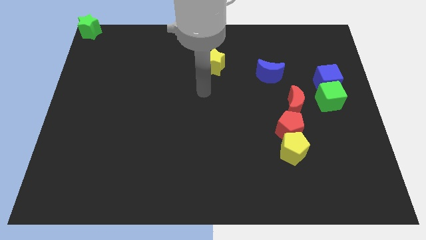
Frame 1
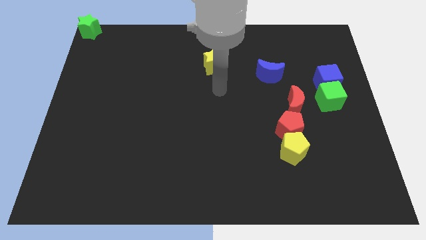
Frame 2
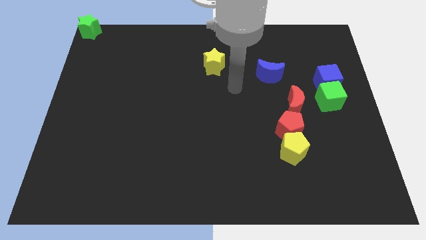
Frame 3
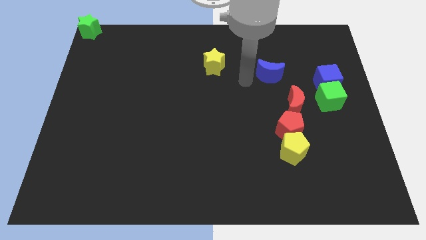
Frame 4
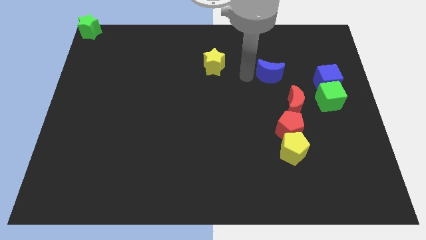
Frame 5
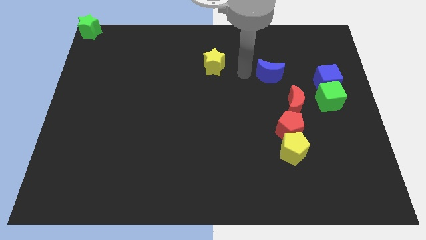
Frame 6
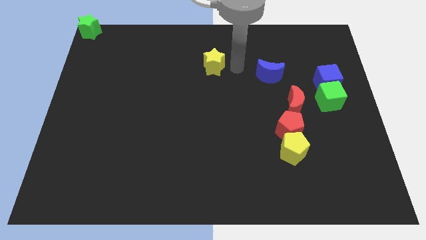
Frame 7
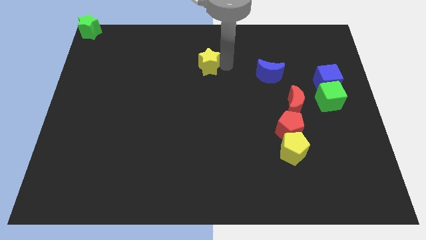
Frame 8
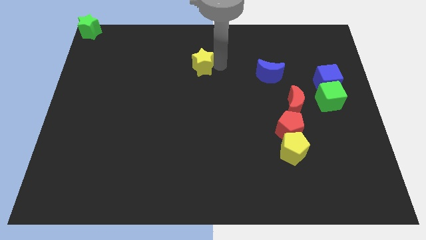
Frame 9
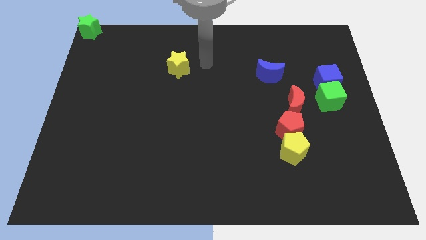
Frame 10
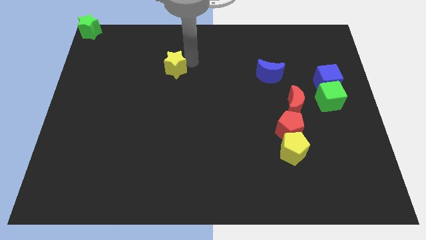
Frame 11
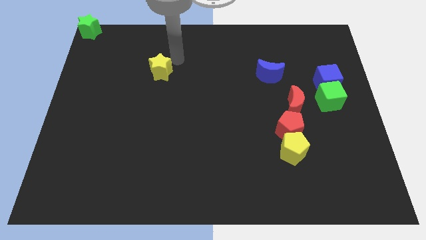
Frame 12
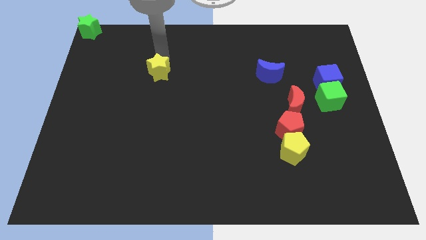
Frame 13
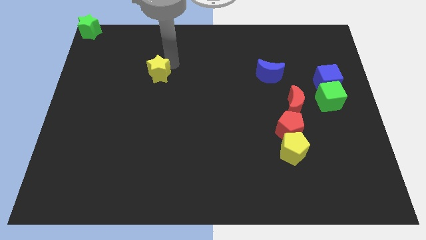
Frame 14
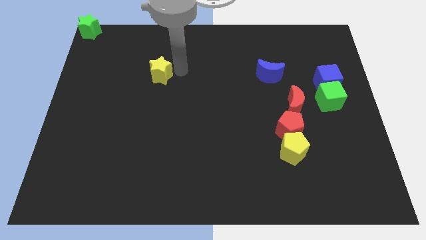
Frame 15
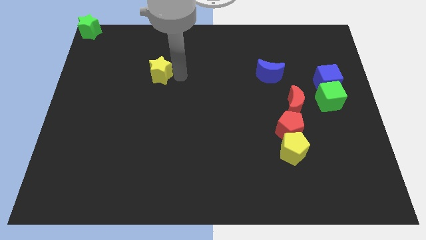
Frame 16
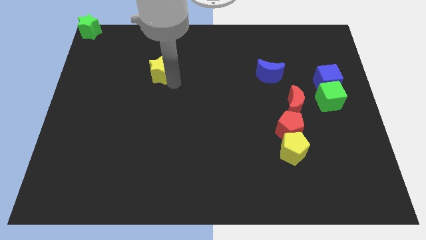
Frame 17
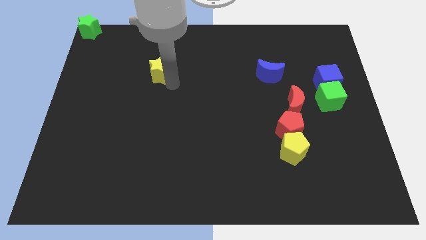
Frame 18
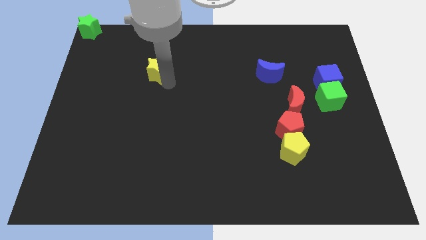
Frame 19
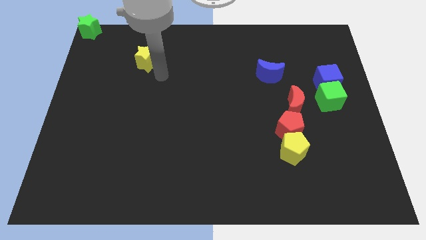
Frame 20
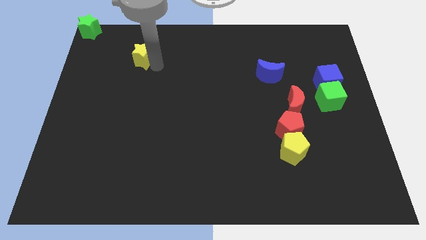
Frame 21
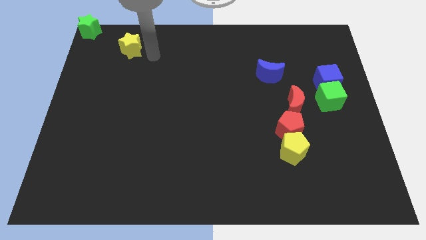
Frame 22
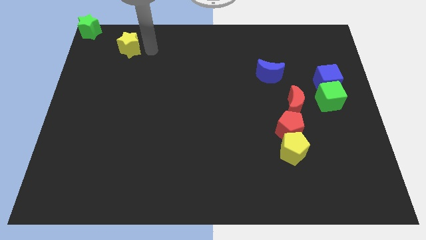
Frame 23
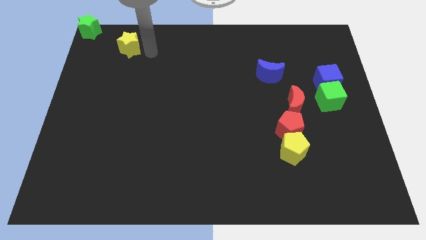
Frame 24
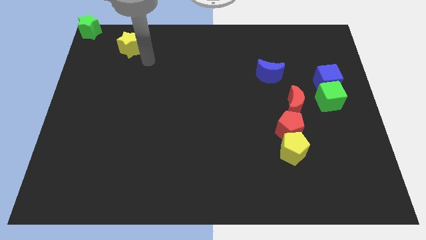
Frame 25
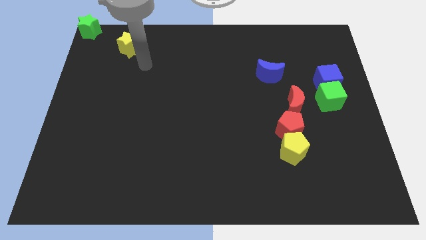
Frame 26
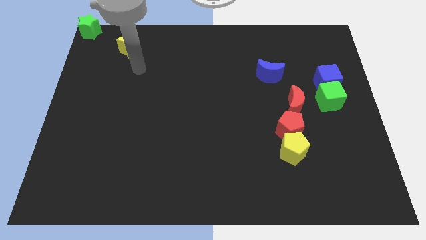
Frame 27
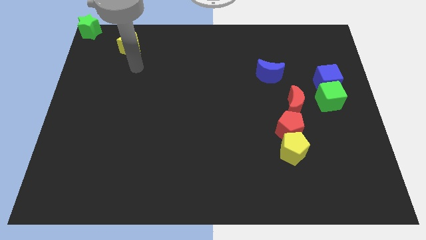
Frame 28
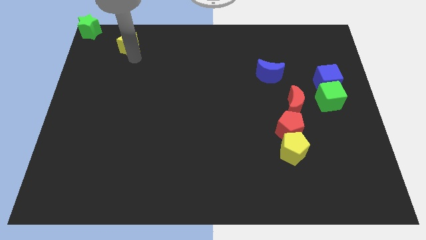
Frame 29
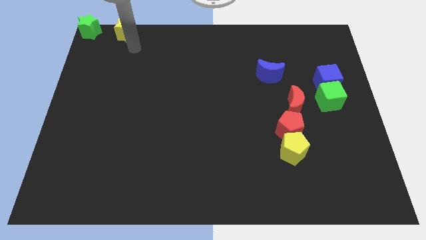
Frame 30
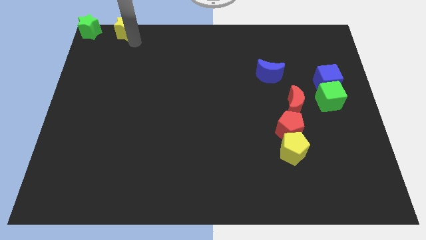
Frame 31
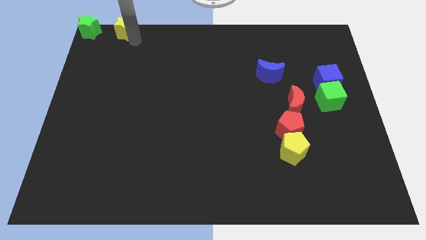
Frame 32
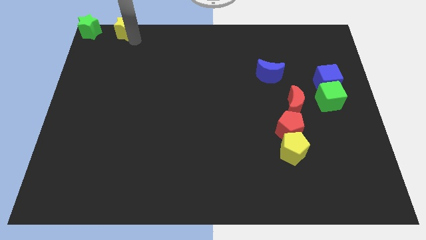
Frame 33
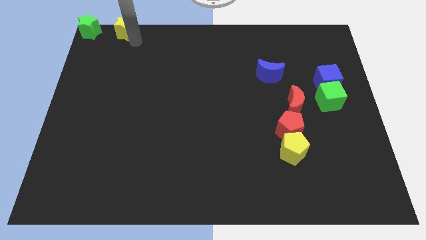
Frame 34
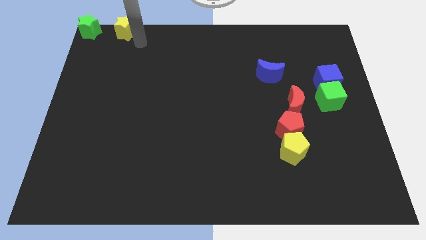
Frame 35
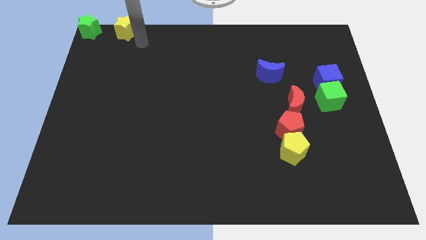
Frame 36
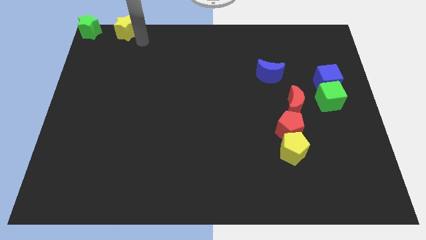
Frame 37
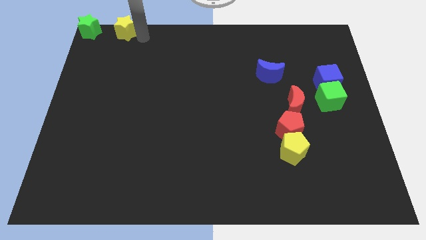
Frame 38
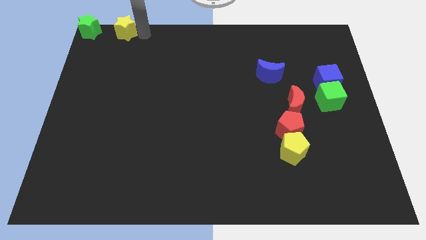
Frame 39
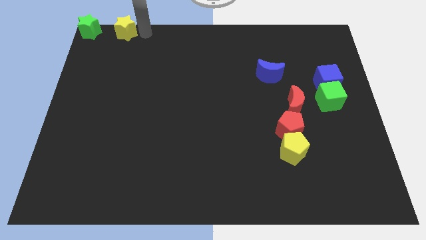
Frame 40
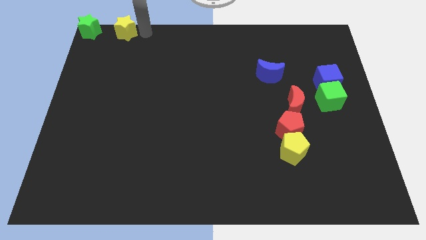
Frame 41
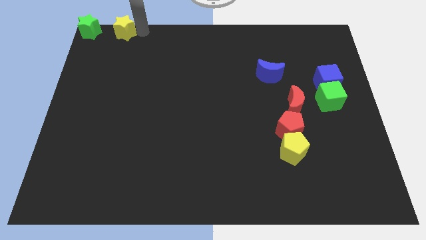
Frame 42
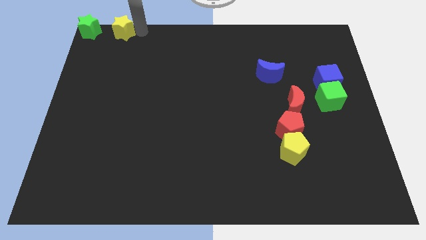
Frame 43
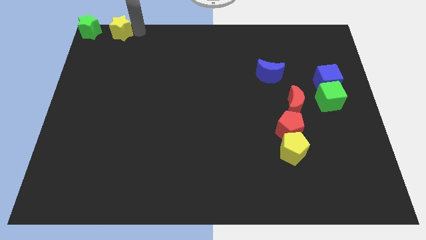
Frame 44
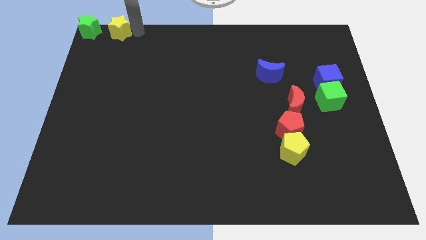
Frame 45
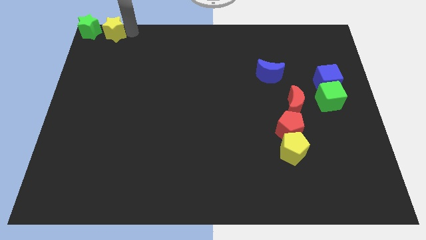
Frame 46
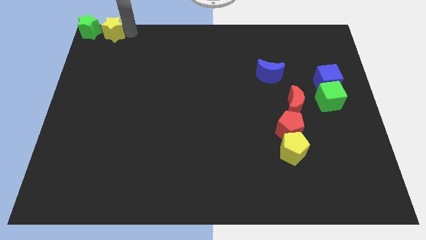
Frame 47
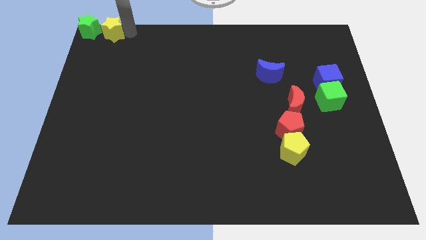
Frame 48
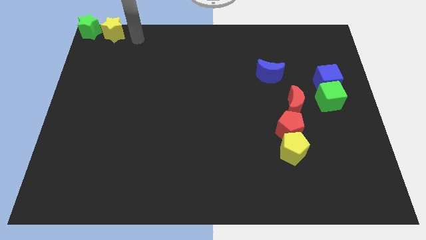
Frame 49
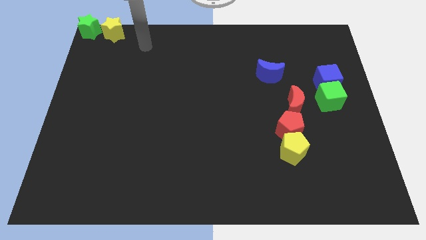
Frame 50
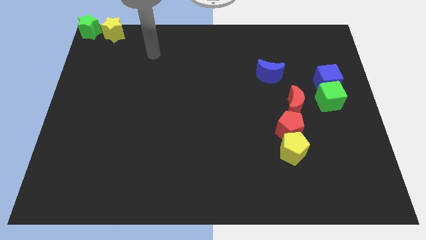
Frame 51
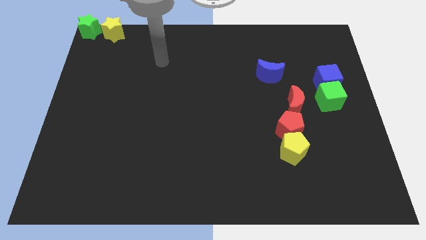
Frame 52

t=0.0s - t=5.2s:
move the yellow star to the right side of the green star

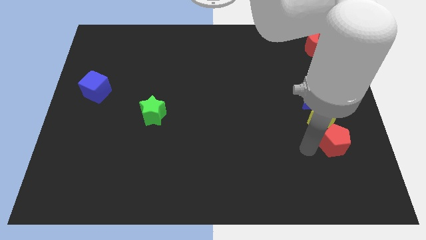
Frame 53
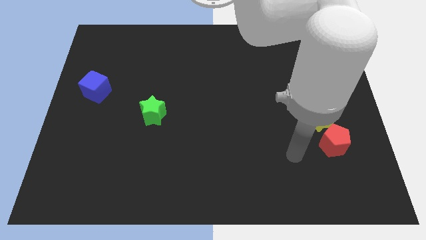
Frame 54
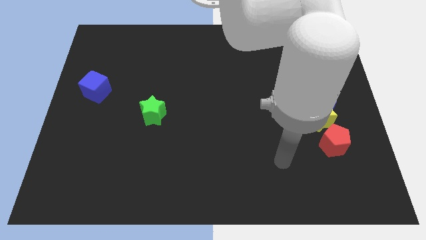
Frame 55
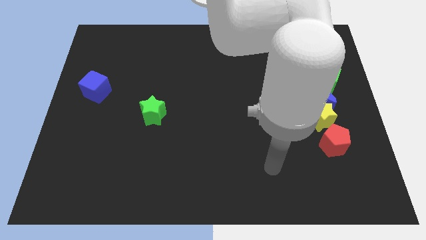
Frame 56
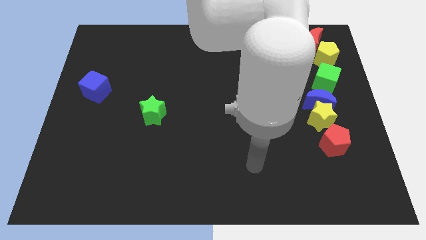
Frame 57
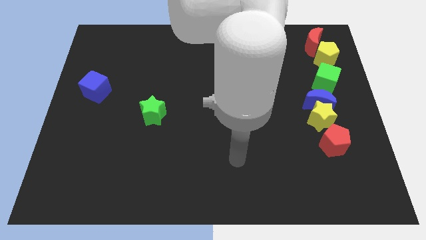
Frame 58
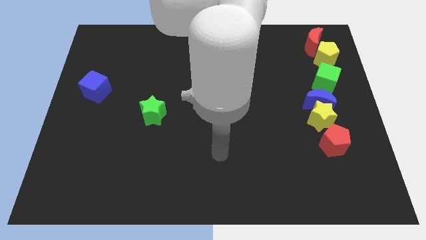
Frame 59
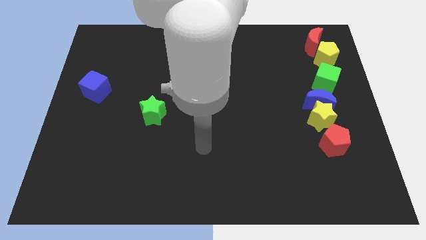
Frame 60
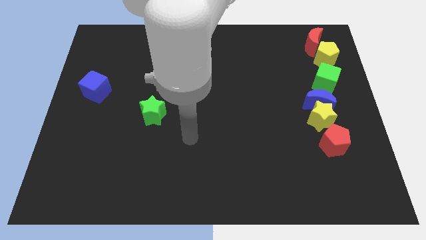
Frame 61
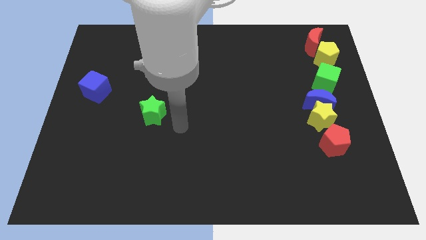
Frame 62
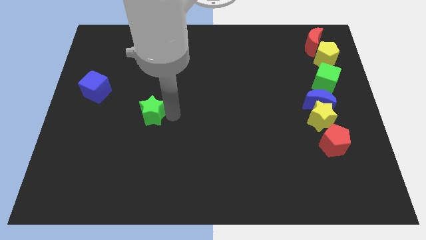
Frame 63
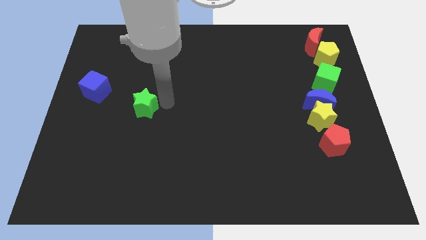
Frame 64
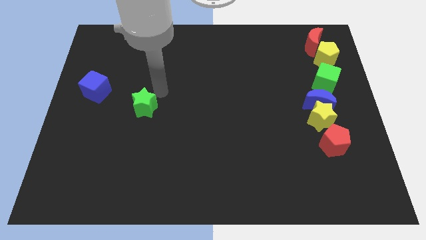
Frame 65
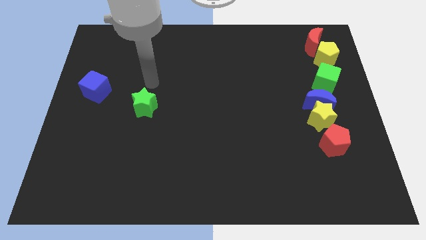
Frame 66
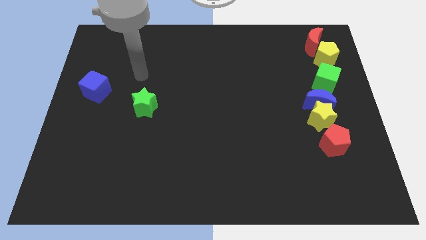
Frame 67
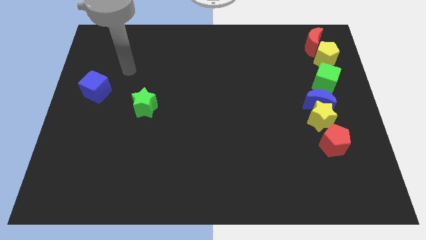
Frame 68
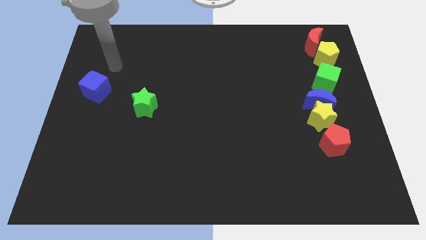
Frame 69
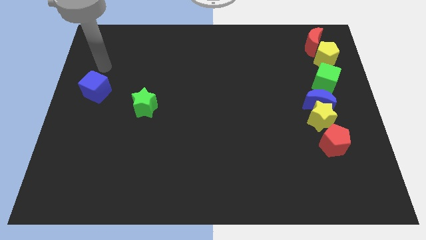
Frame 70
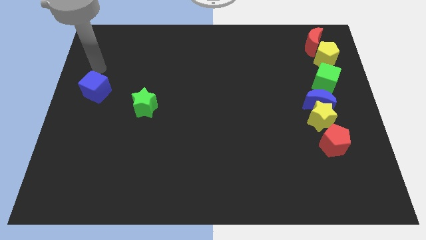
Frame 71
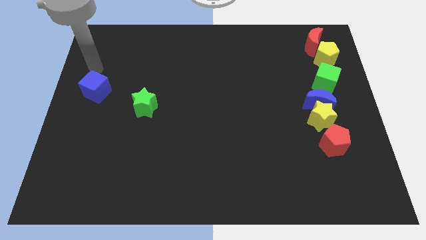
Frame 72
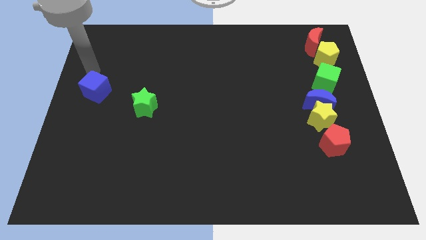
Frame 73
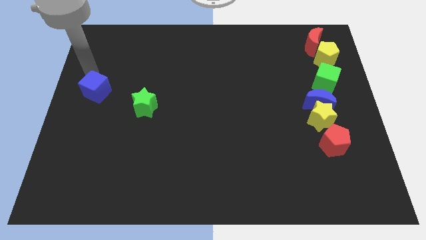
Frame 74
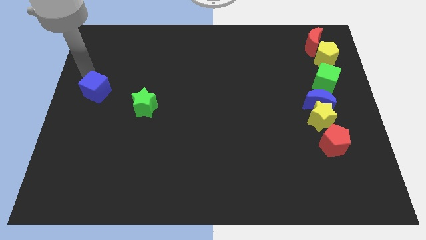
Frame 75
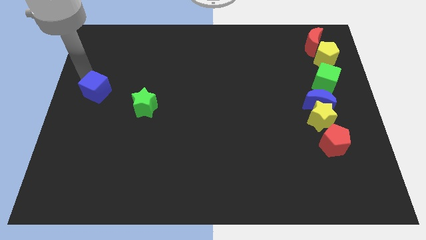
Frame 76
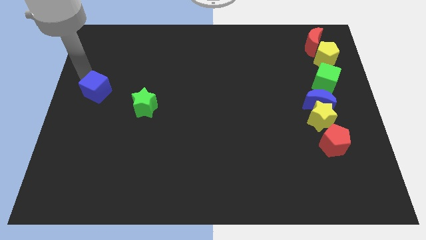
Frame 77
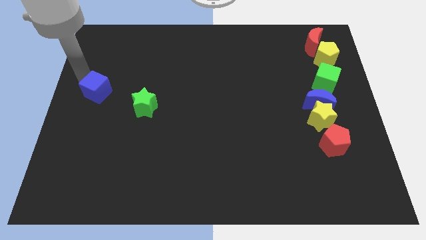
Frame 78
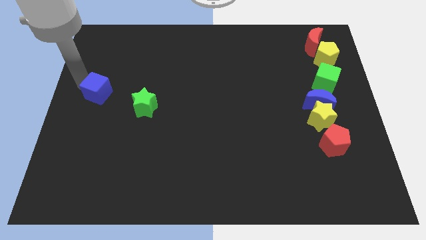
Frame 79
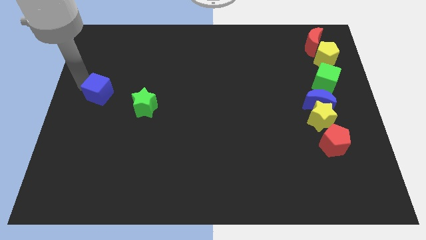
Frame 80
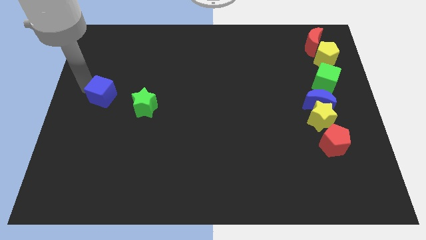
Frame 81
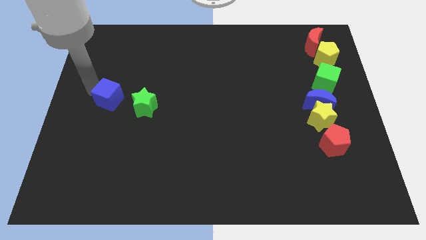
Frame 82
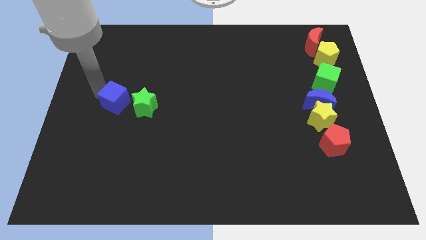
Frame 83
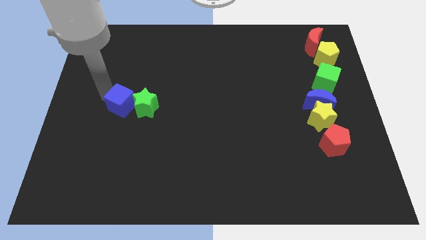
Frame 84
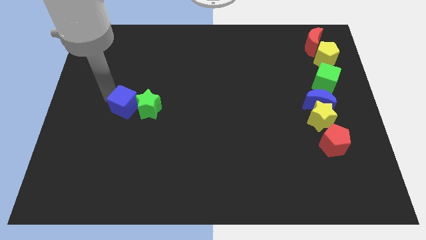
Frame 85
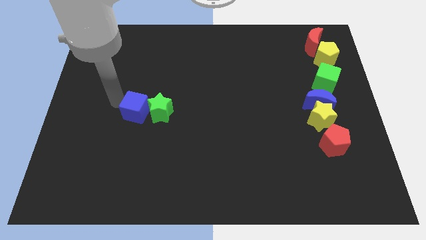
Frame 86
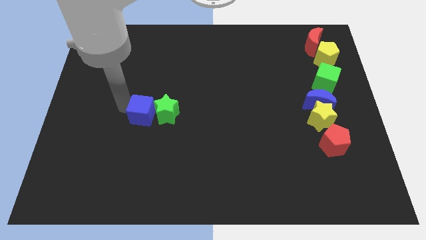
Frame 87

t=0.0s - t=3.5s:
move the blue cube into the green star

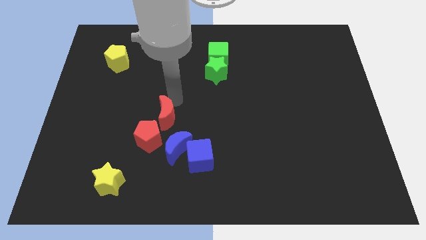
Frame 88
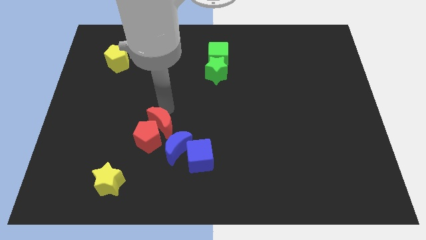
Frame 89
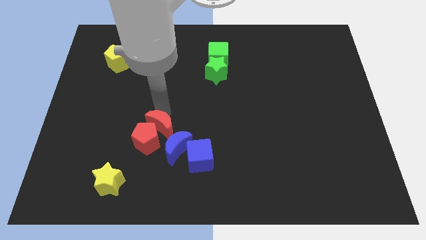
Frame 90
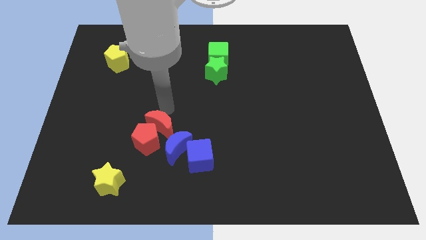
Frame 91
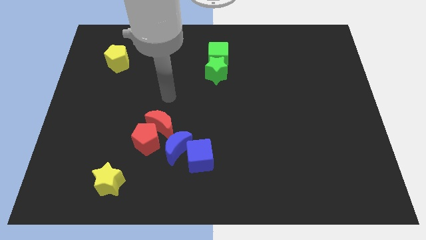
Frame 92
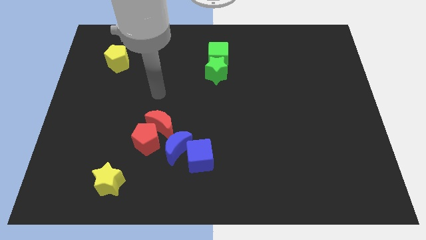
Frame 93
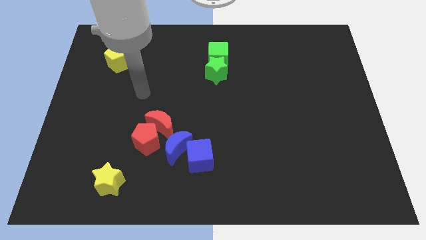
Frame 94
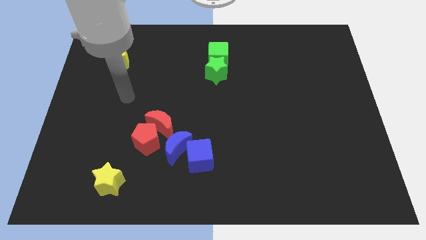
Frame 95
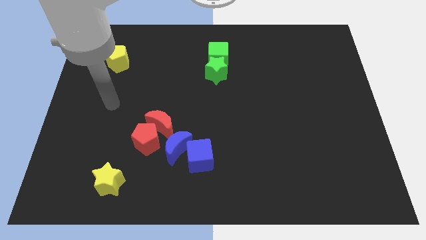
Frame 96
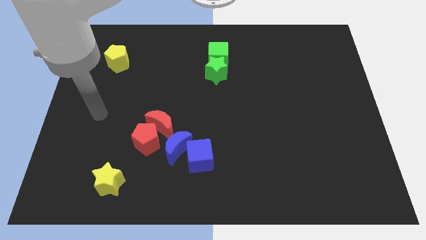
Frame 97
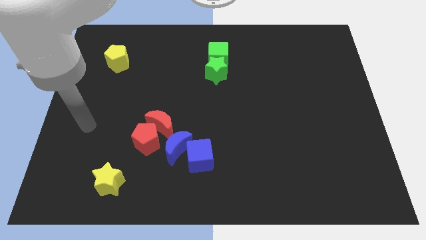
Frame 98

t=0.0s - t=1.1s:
push the red crescent into the red pentagon diagonally from the top right
